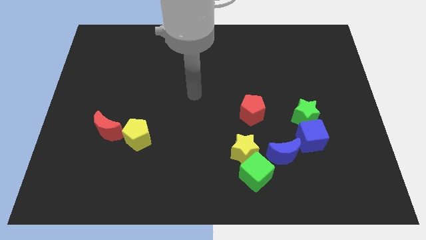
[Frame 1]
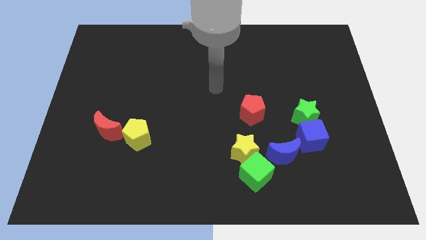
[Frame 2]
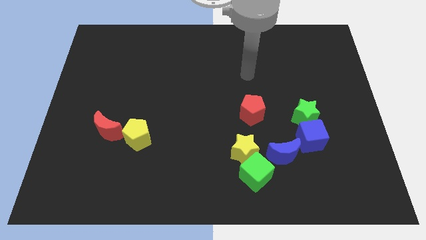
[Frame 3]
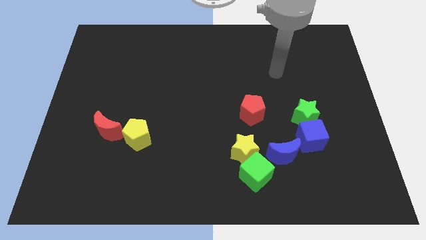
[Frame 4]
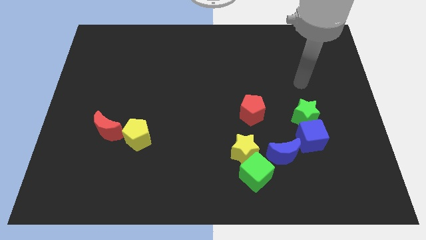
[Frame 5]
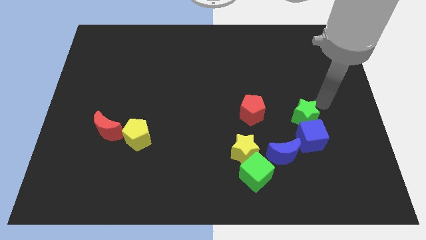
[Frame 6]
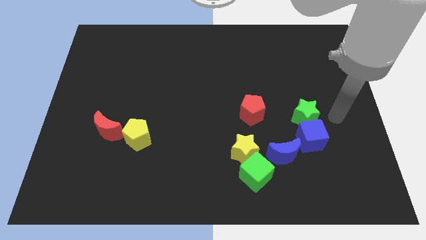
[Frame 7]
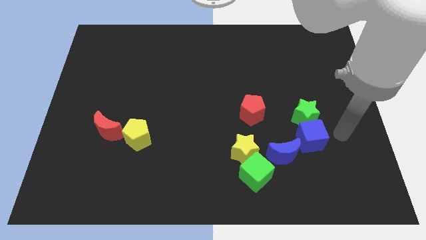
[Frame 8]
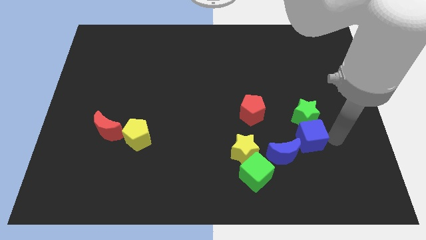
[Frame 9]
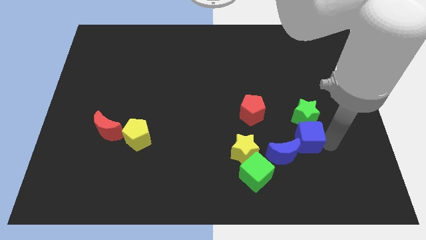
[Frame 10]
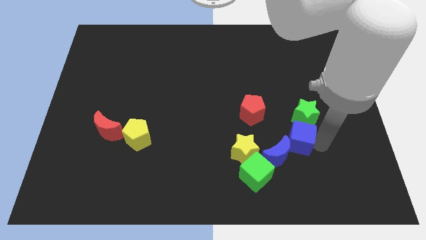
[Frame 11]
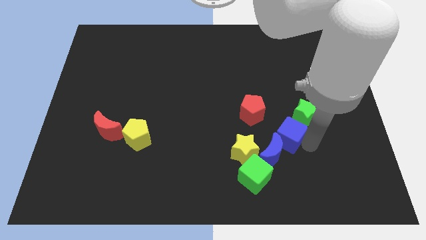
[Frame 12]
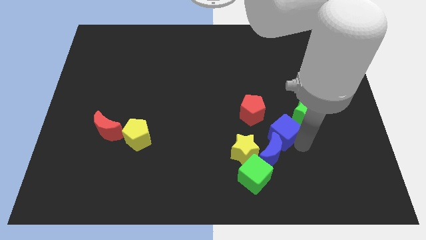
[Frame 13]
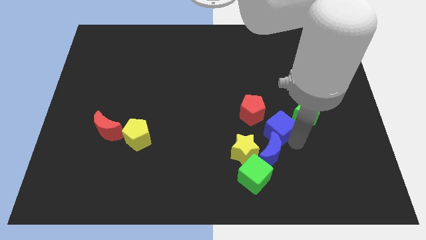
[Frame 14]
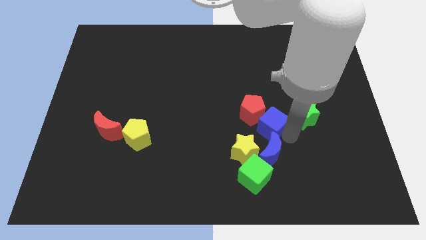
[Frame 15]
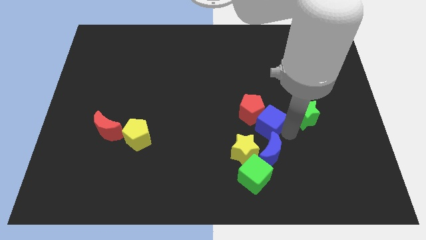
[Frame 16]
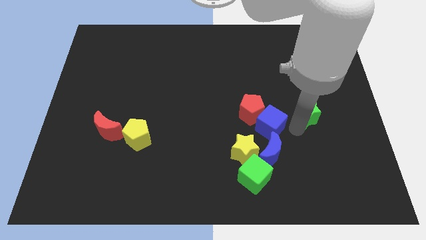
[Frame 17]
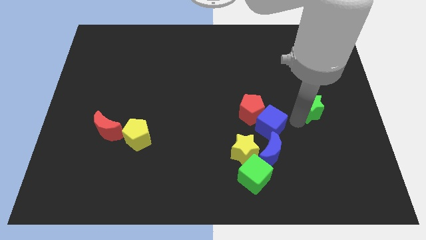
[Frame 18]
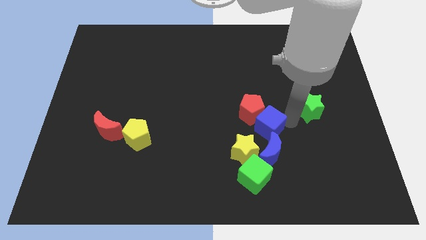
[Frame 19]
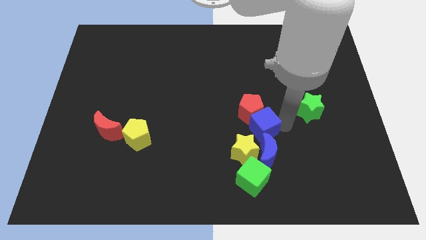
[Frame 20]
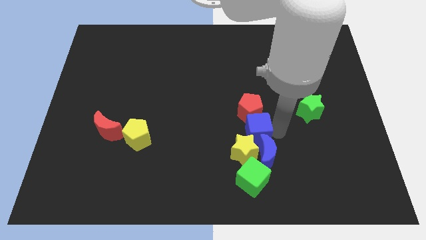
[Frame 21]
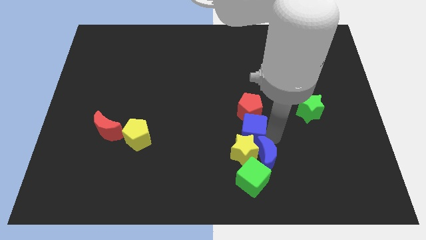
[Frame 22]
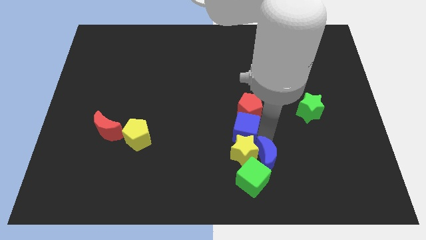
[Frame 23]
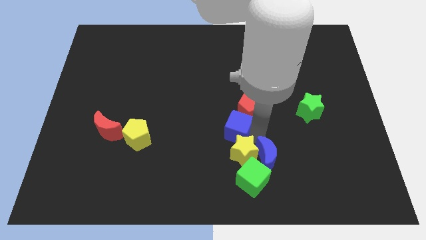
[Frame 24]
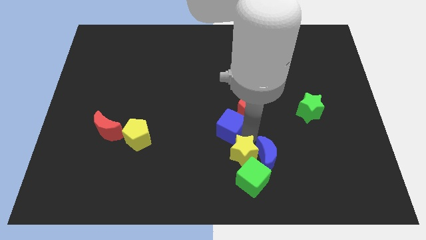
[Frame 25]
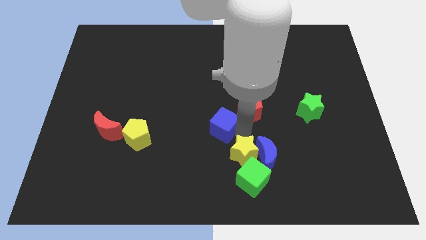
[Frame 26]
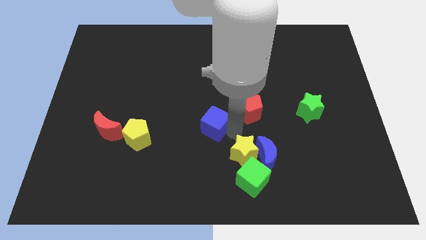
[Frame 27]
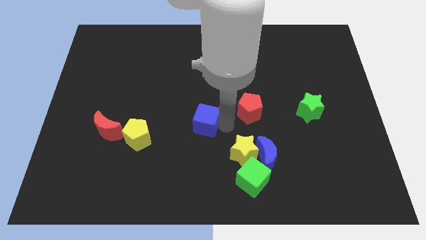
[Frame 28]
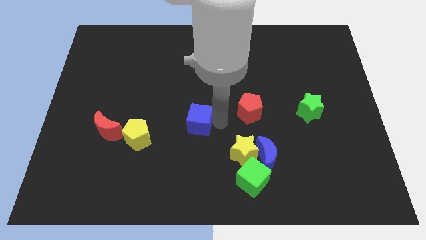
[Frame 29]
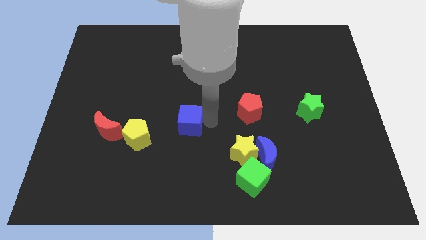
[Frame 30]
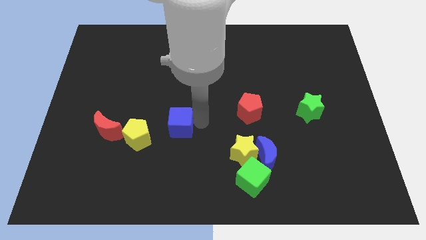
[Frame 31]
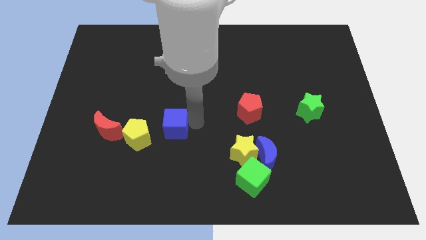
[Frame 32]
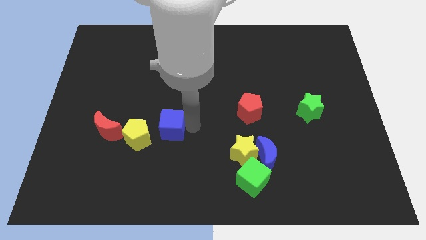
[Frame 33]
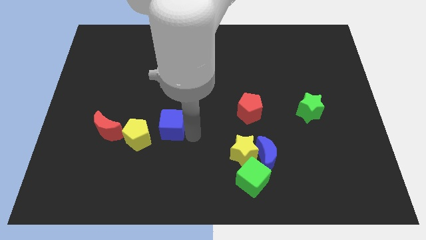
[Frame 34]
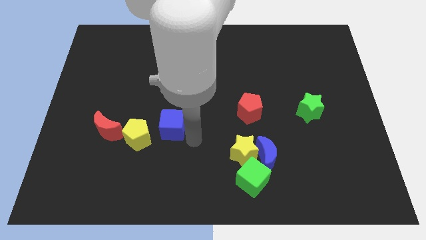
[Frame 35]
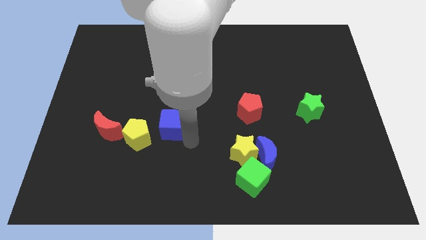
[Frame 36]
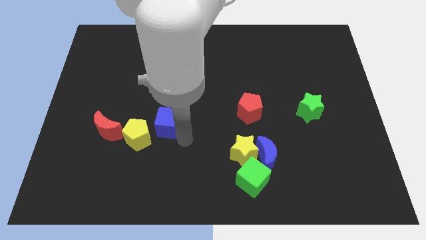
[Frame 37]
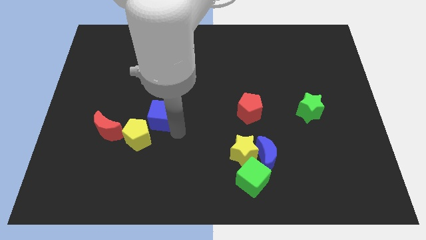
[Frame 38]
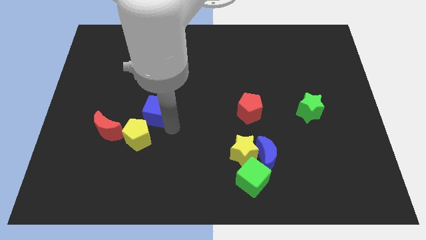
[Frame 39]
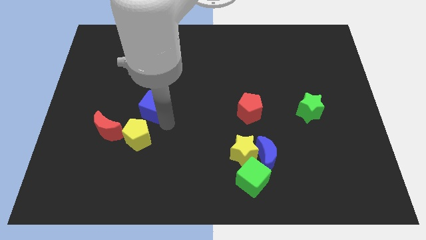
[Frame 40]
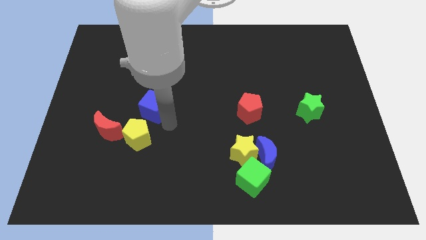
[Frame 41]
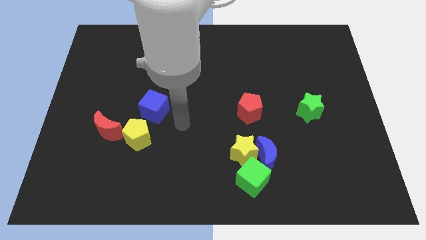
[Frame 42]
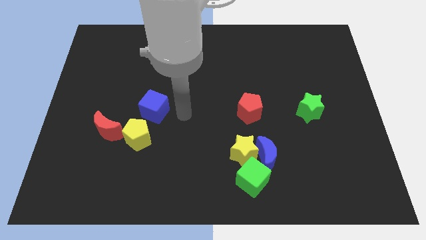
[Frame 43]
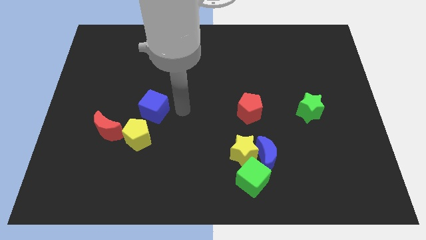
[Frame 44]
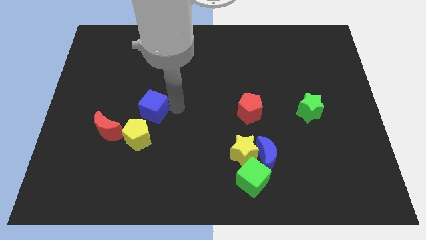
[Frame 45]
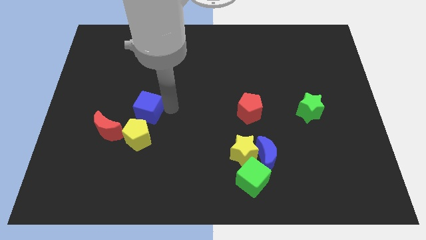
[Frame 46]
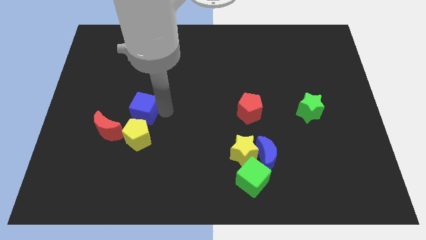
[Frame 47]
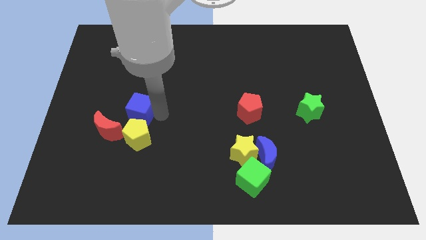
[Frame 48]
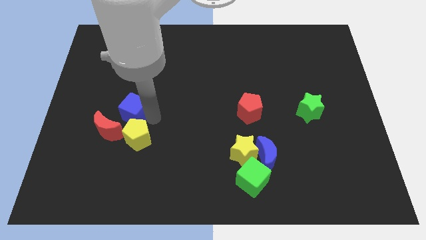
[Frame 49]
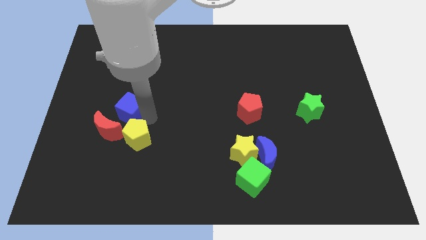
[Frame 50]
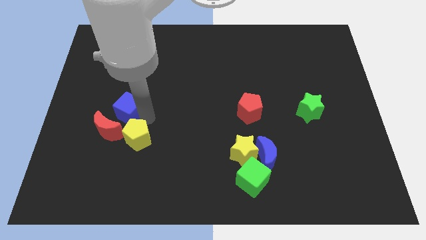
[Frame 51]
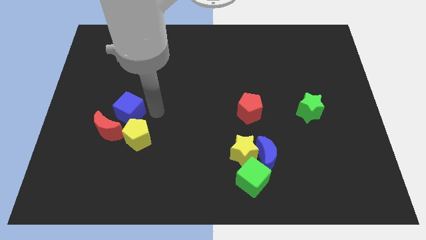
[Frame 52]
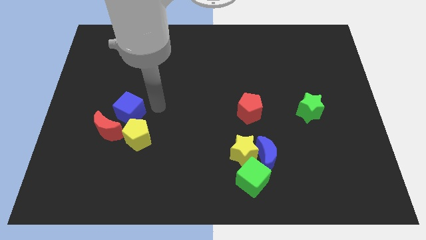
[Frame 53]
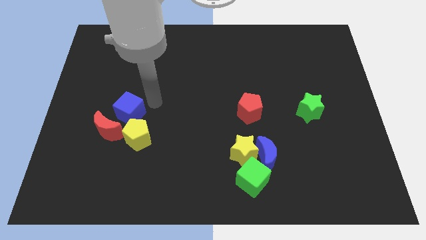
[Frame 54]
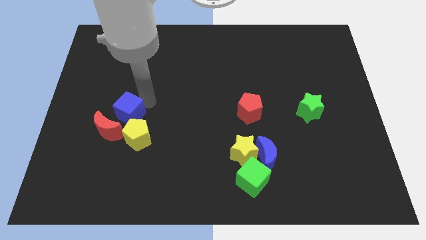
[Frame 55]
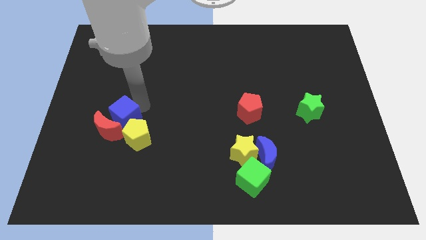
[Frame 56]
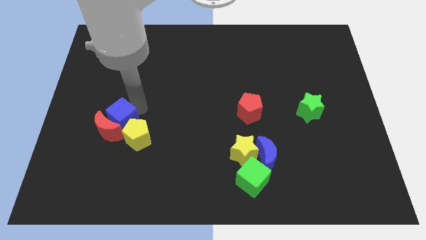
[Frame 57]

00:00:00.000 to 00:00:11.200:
put the blue cube next to the red moon

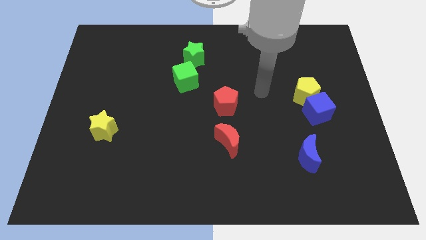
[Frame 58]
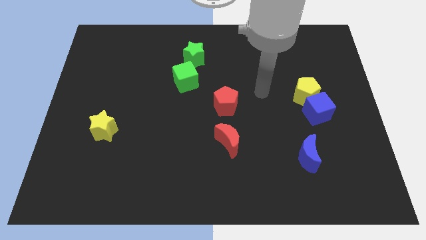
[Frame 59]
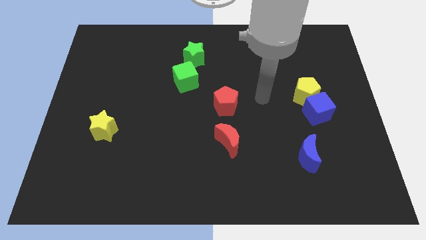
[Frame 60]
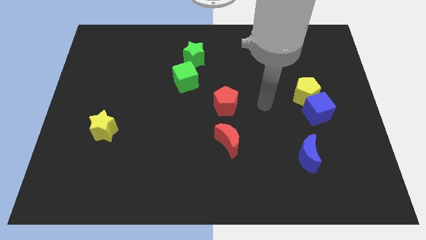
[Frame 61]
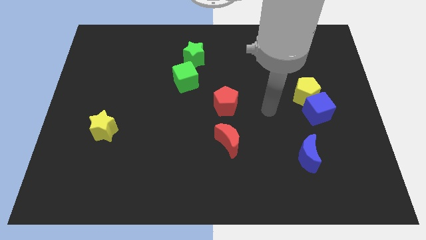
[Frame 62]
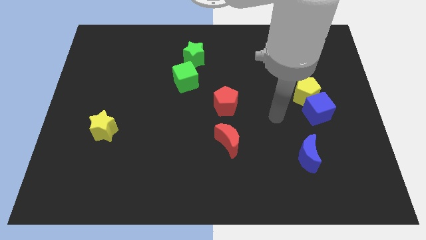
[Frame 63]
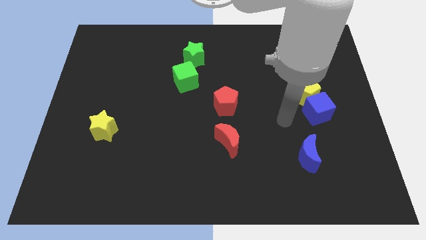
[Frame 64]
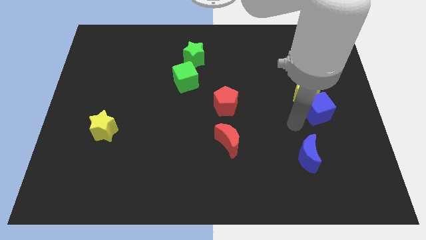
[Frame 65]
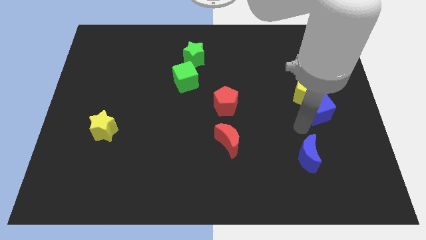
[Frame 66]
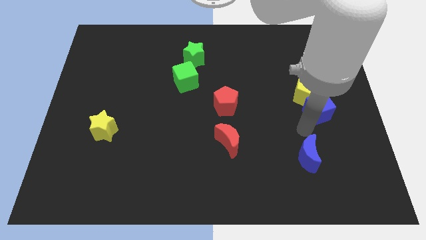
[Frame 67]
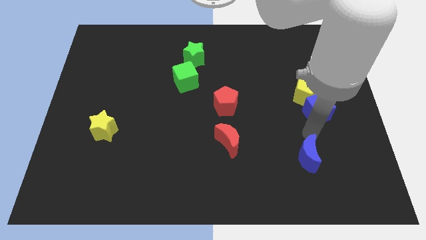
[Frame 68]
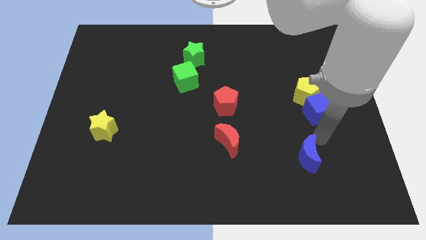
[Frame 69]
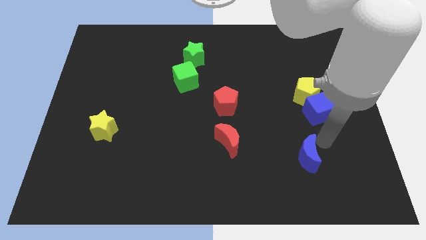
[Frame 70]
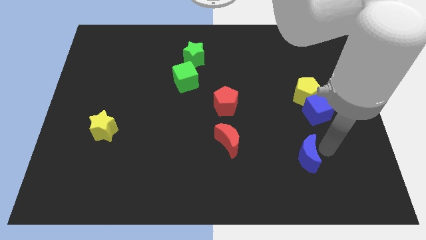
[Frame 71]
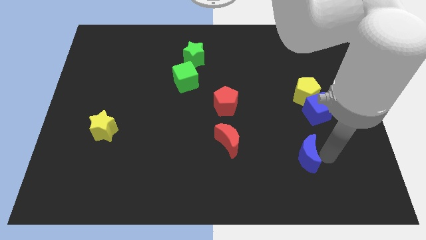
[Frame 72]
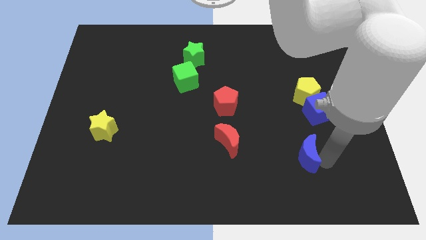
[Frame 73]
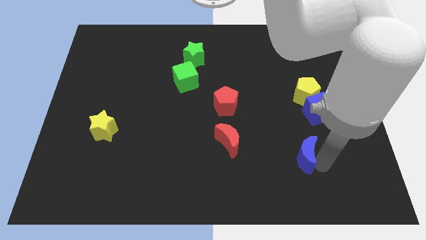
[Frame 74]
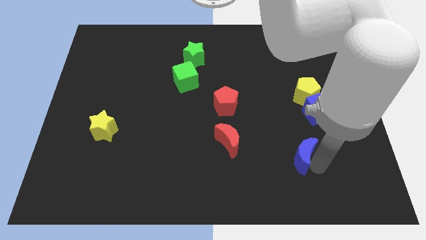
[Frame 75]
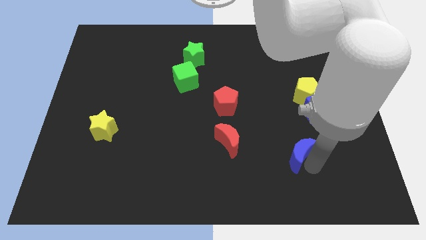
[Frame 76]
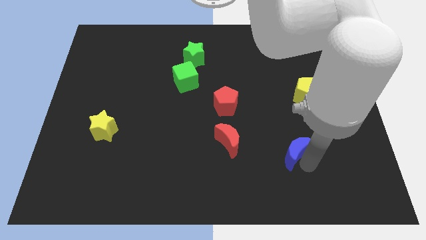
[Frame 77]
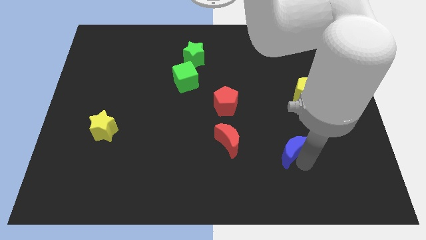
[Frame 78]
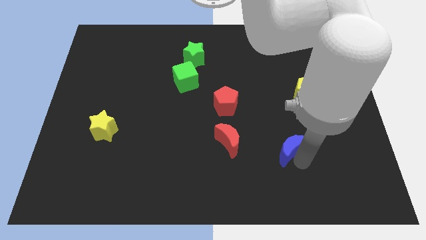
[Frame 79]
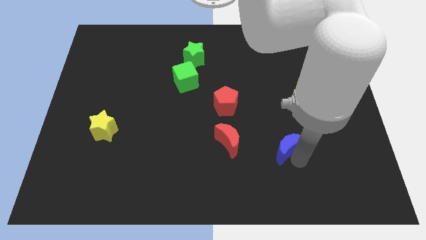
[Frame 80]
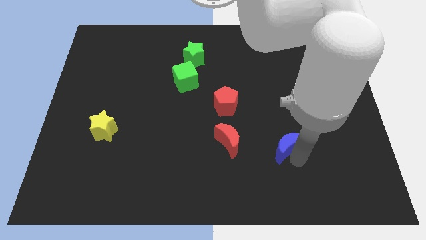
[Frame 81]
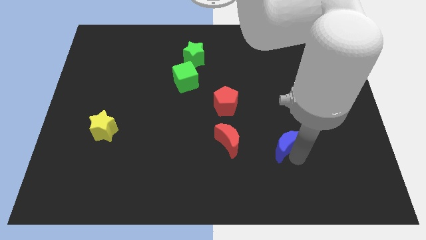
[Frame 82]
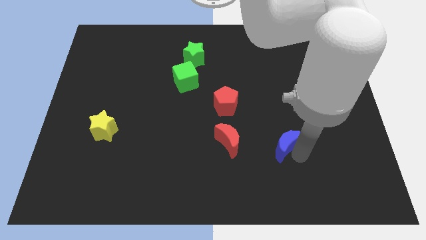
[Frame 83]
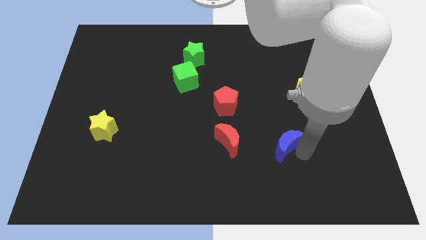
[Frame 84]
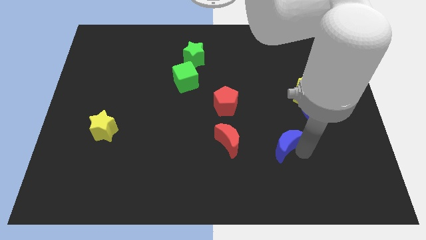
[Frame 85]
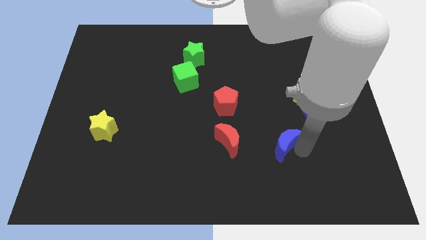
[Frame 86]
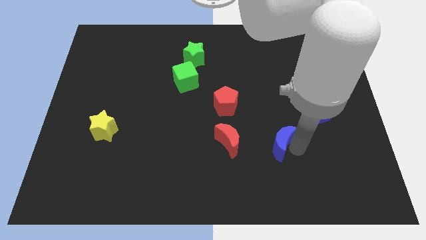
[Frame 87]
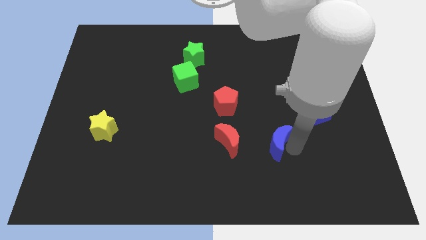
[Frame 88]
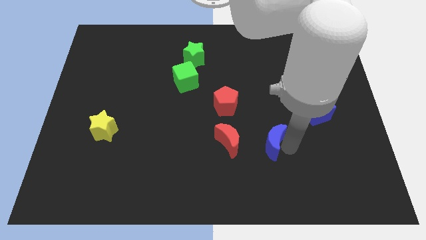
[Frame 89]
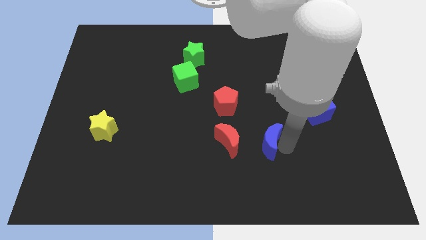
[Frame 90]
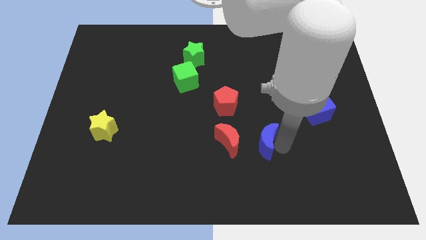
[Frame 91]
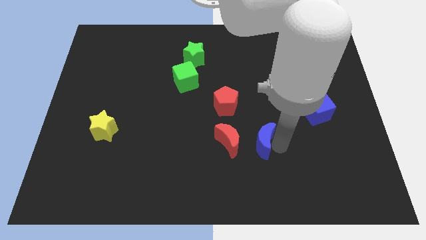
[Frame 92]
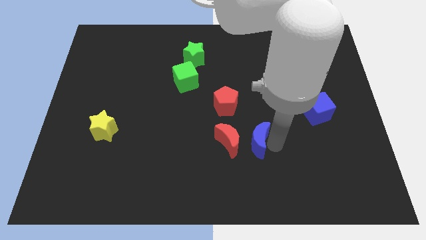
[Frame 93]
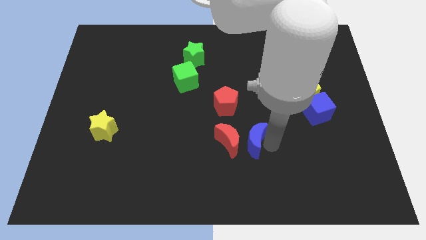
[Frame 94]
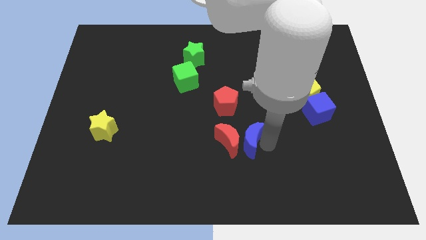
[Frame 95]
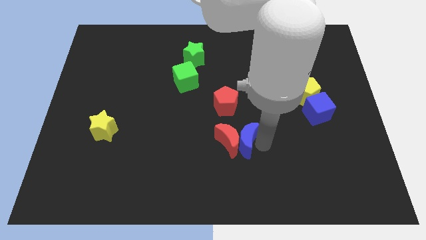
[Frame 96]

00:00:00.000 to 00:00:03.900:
slide the blue moon close to the red moon
